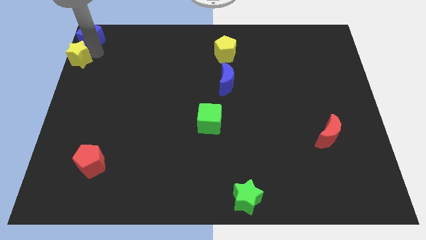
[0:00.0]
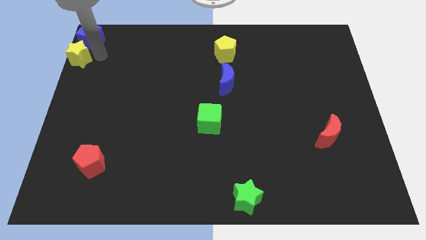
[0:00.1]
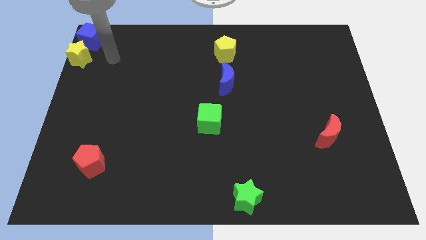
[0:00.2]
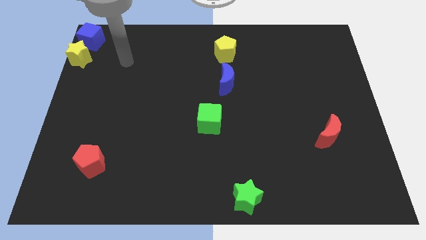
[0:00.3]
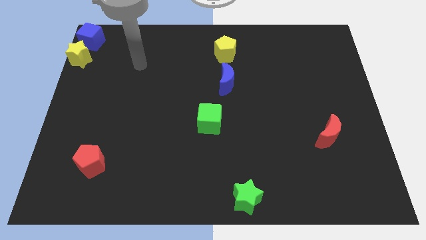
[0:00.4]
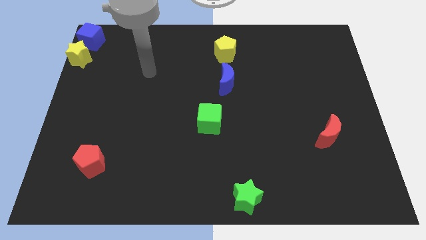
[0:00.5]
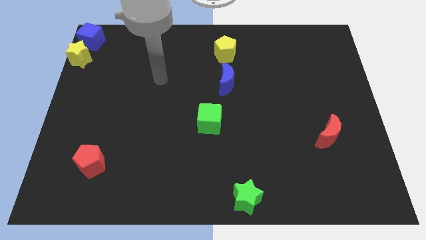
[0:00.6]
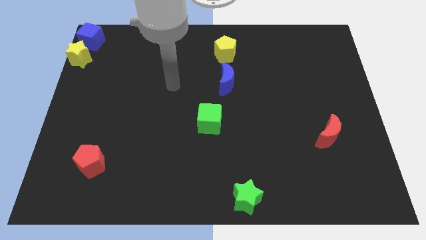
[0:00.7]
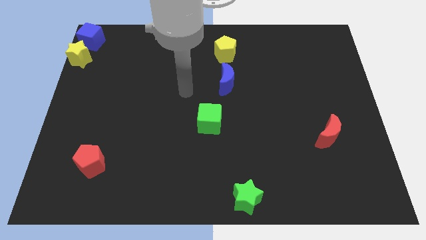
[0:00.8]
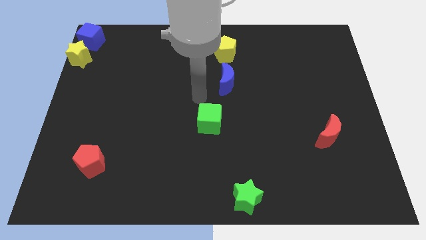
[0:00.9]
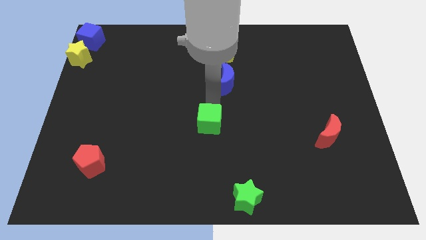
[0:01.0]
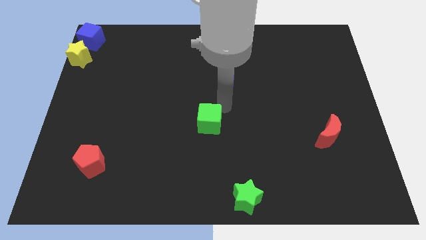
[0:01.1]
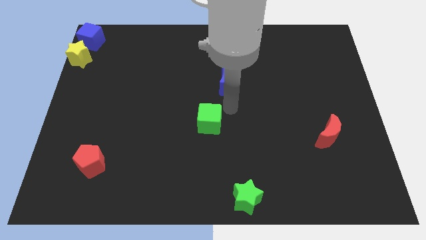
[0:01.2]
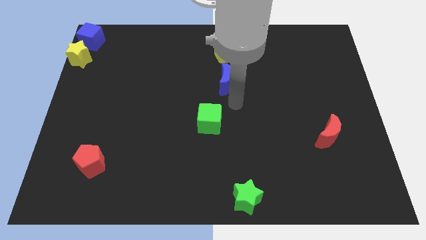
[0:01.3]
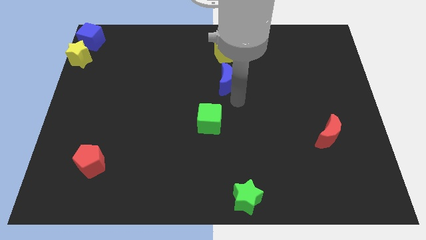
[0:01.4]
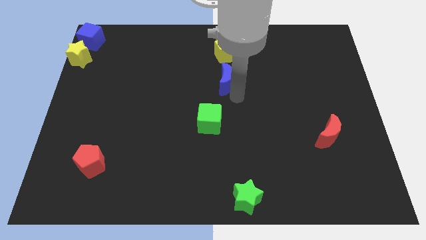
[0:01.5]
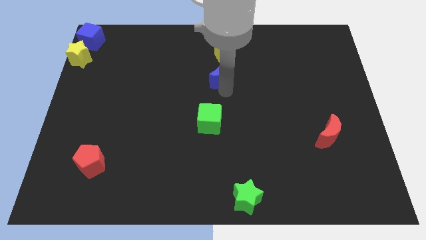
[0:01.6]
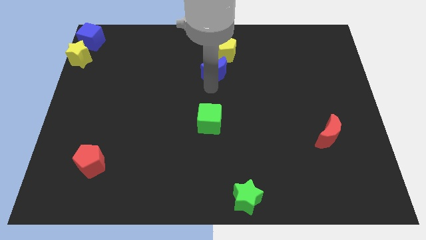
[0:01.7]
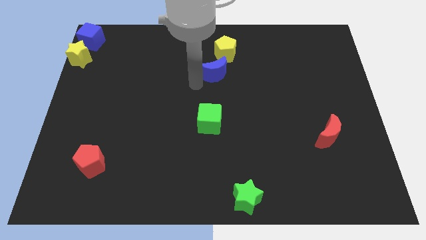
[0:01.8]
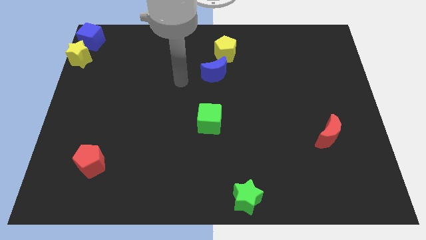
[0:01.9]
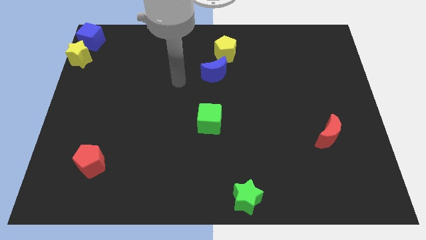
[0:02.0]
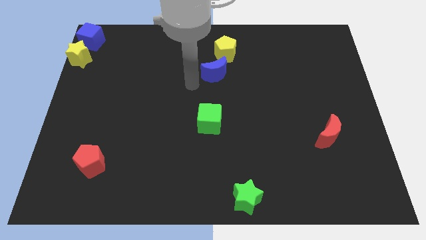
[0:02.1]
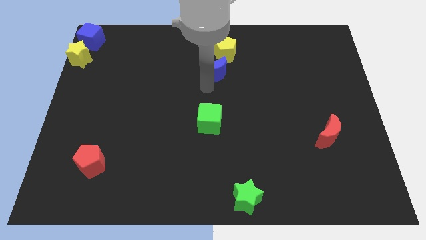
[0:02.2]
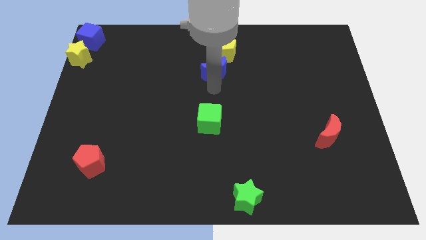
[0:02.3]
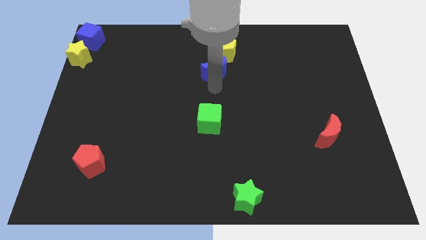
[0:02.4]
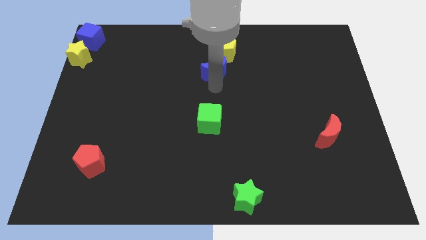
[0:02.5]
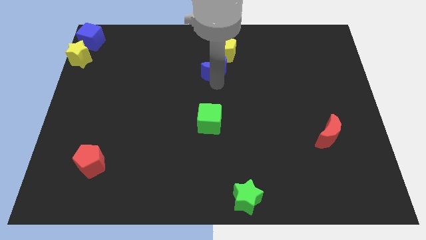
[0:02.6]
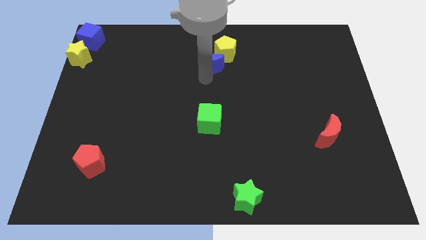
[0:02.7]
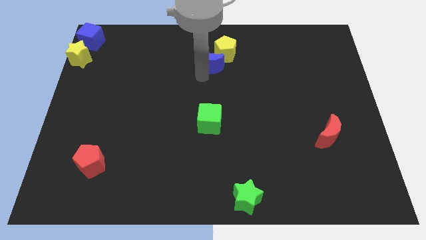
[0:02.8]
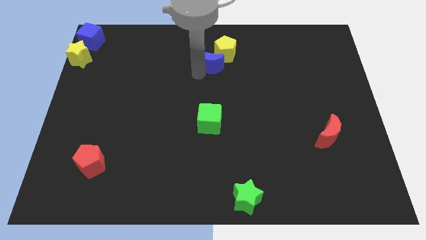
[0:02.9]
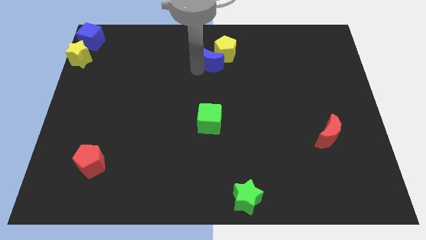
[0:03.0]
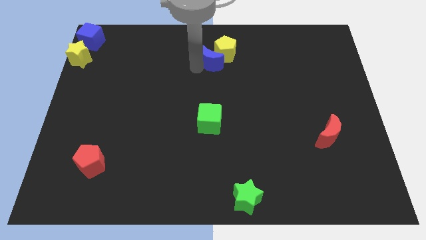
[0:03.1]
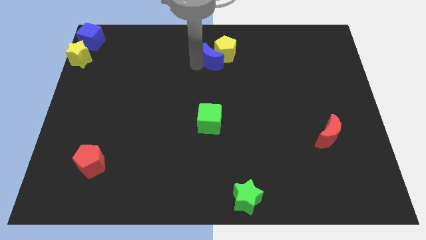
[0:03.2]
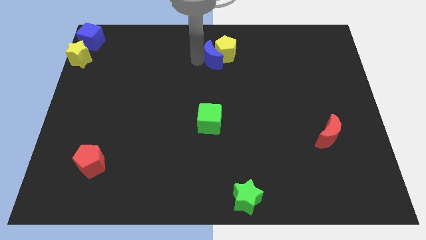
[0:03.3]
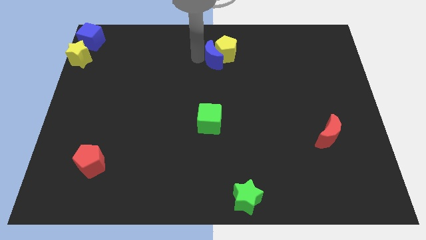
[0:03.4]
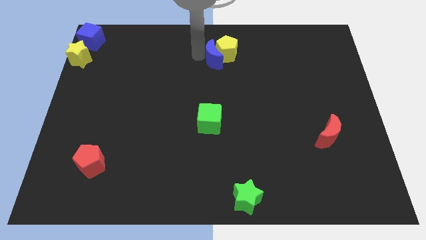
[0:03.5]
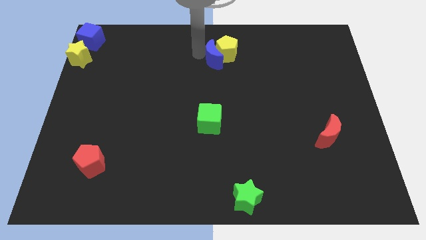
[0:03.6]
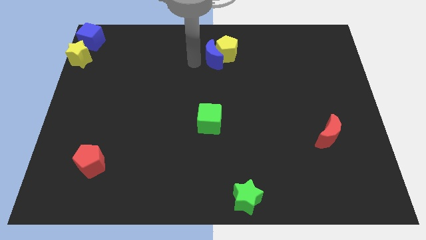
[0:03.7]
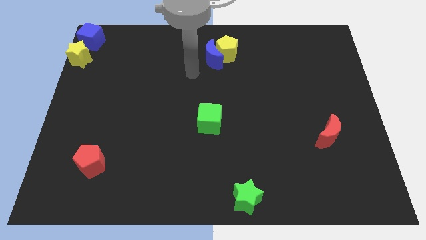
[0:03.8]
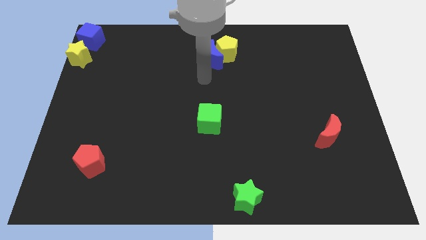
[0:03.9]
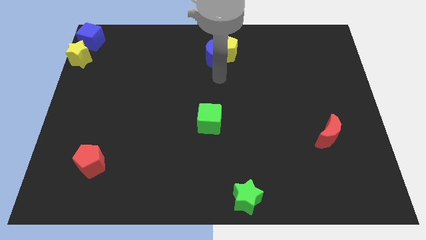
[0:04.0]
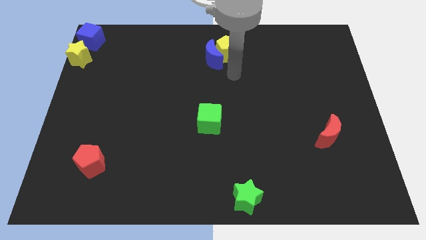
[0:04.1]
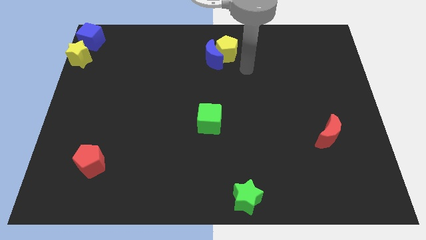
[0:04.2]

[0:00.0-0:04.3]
push the blue crescent into the yellow pentagon

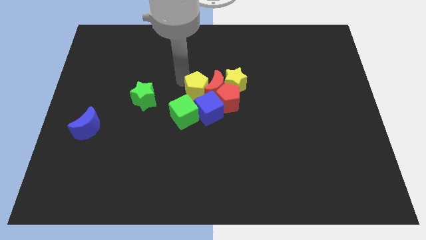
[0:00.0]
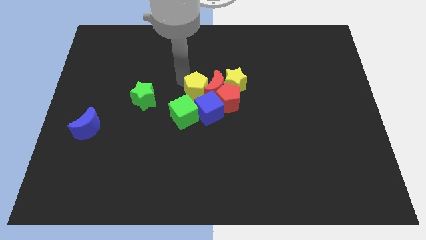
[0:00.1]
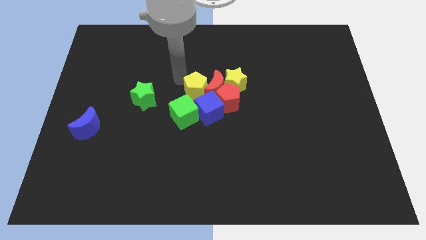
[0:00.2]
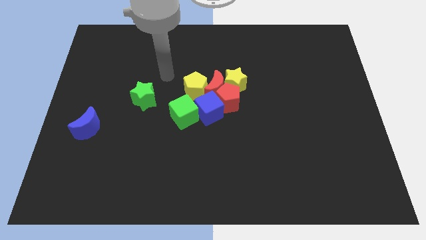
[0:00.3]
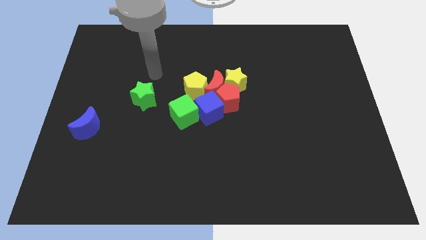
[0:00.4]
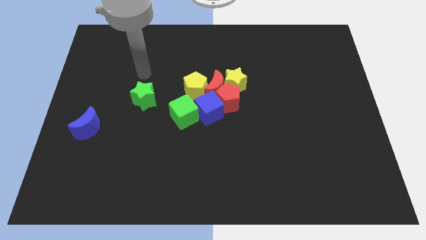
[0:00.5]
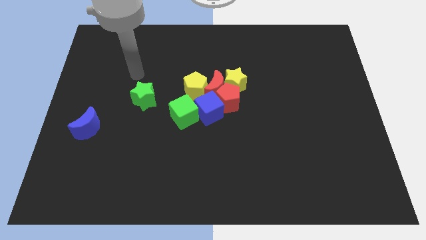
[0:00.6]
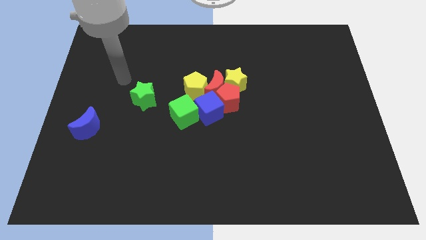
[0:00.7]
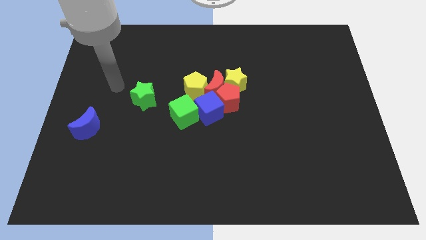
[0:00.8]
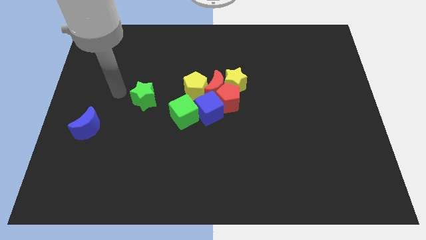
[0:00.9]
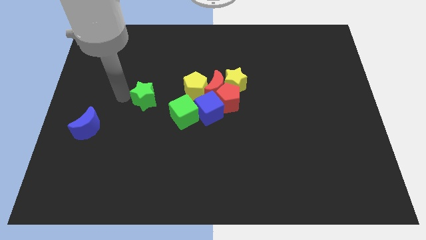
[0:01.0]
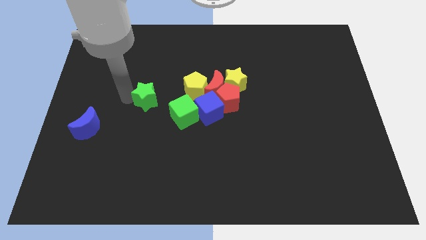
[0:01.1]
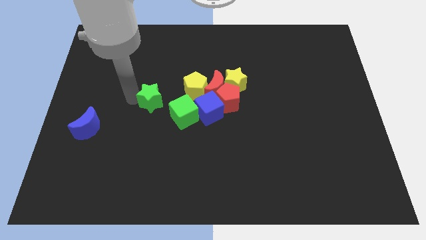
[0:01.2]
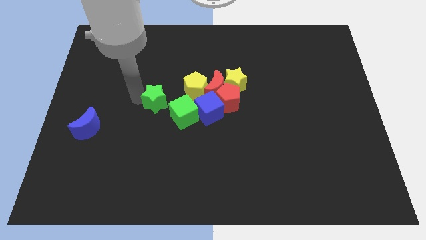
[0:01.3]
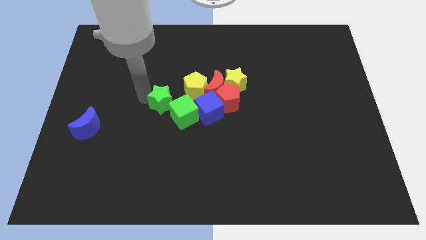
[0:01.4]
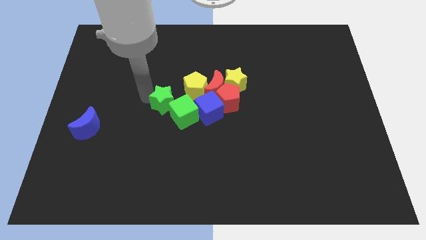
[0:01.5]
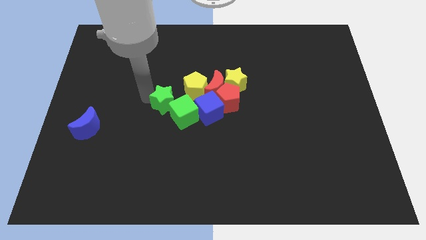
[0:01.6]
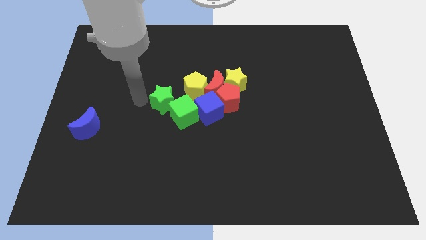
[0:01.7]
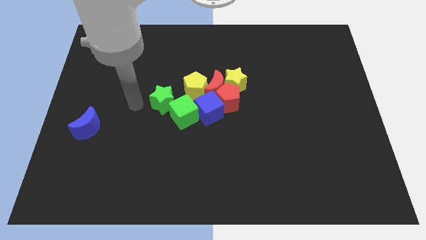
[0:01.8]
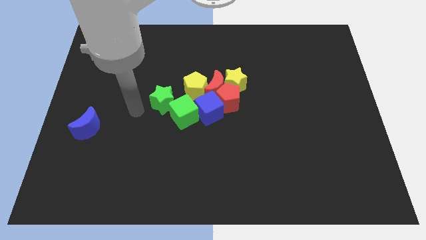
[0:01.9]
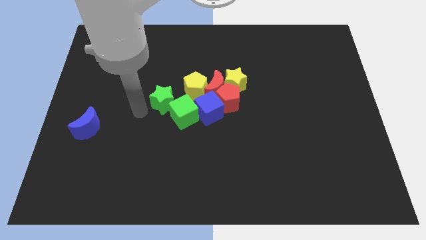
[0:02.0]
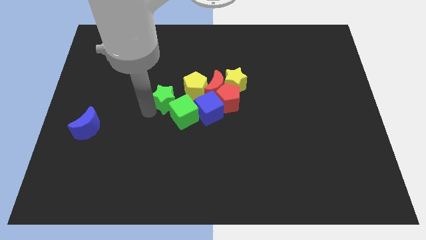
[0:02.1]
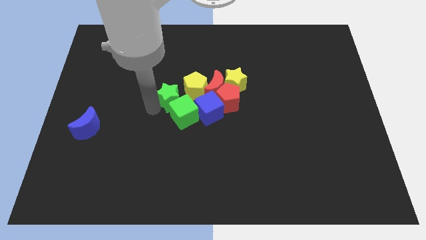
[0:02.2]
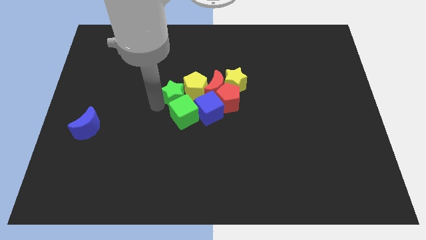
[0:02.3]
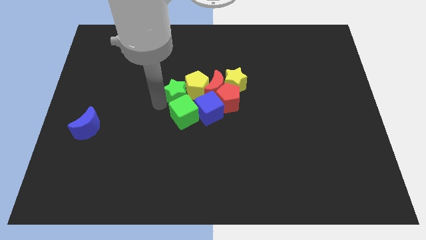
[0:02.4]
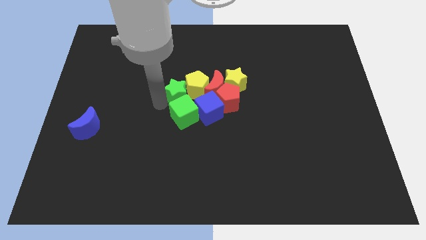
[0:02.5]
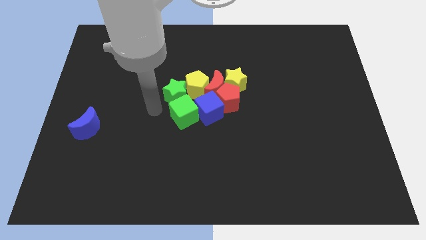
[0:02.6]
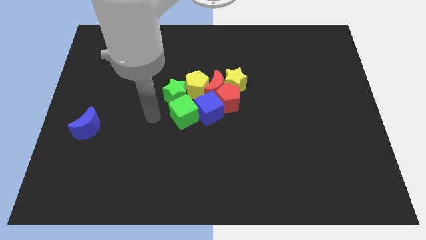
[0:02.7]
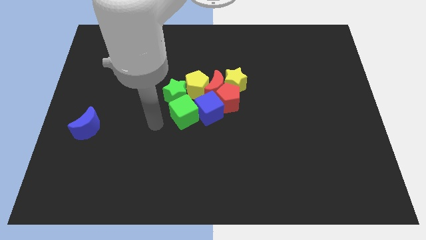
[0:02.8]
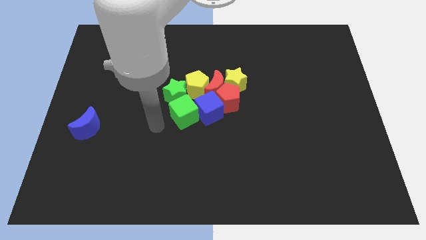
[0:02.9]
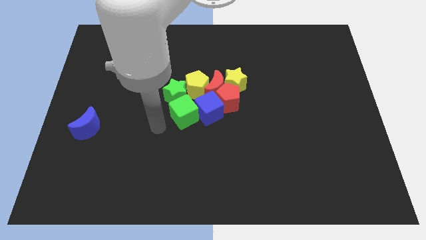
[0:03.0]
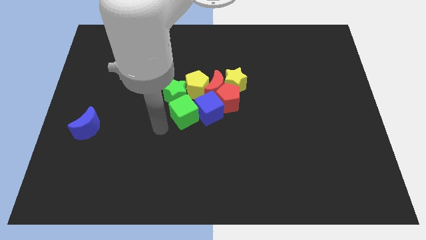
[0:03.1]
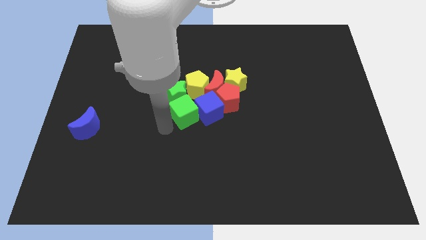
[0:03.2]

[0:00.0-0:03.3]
push the green star towards the group of blocks

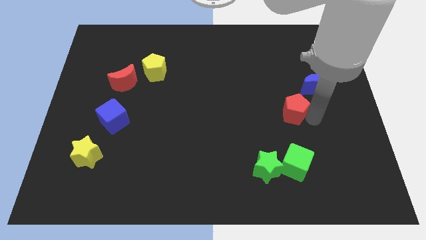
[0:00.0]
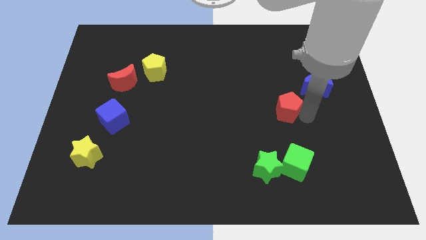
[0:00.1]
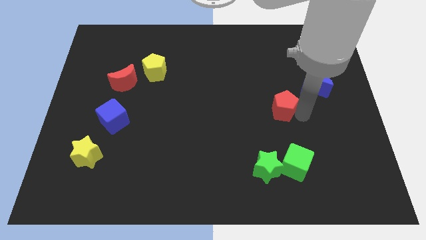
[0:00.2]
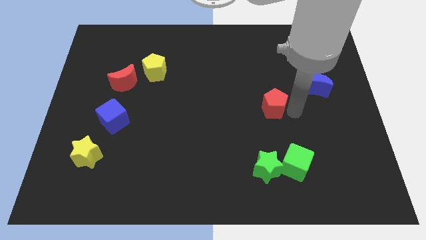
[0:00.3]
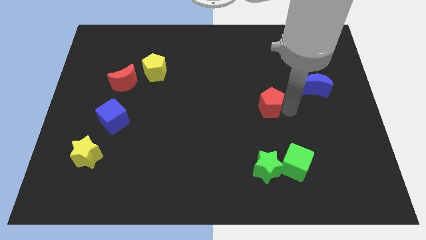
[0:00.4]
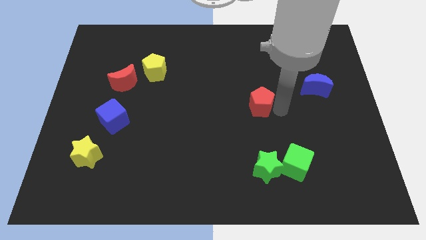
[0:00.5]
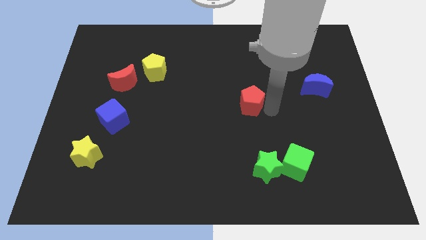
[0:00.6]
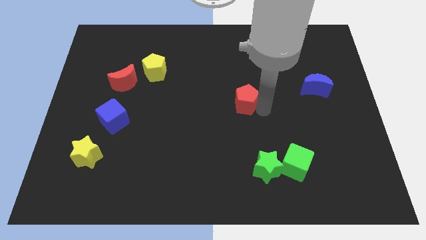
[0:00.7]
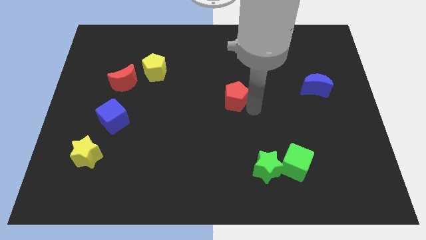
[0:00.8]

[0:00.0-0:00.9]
place red pentagon in center

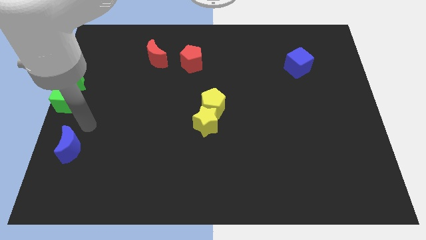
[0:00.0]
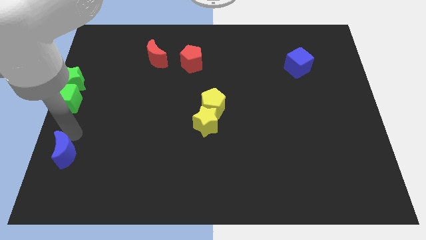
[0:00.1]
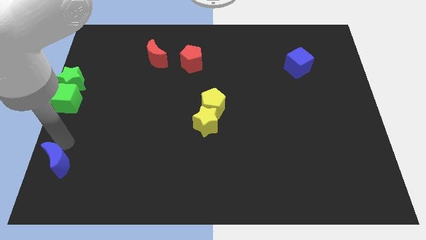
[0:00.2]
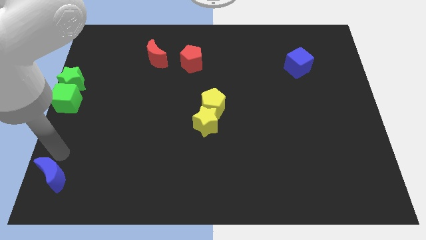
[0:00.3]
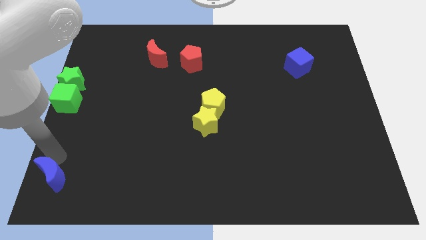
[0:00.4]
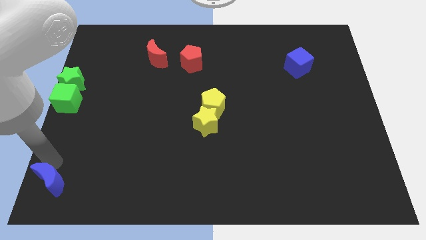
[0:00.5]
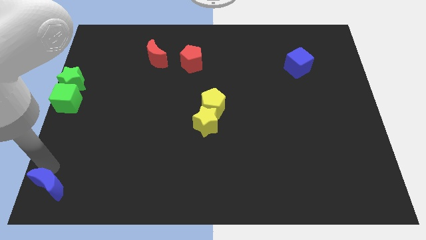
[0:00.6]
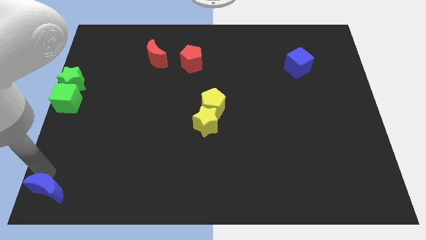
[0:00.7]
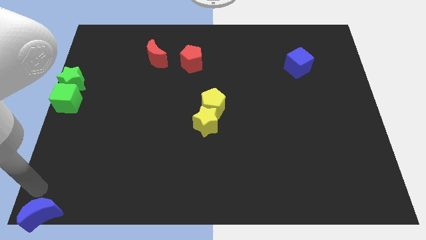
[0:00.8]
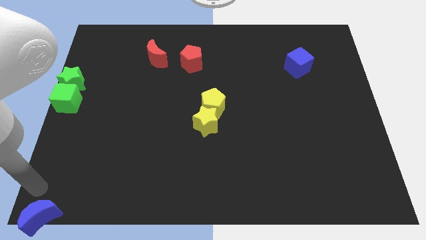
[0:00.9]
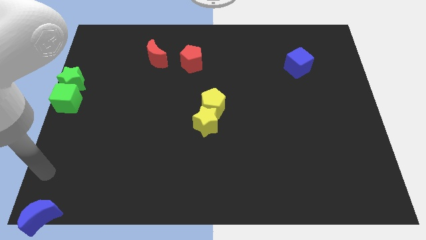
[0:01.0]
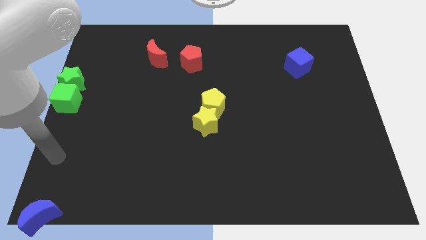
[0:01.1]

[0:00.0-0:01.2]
move blue moon to the bottom left corner
